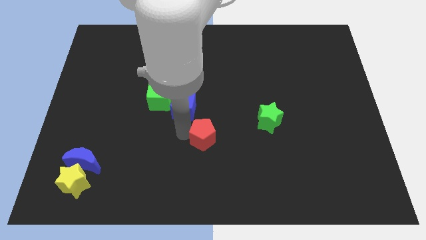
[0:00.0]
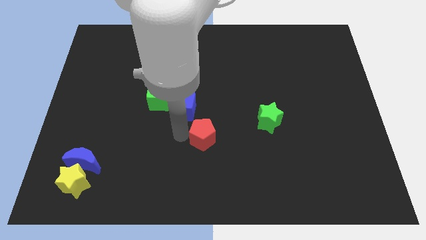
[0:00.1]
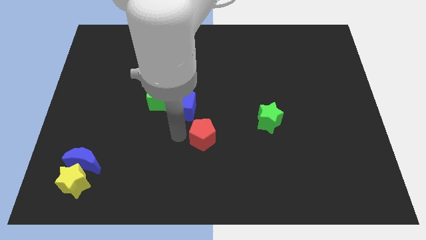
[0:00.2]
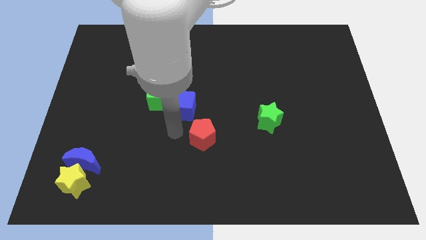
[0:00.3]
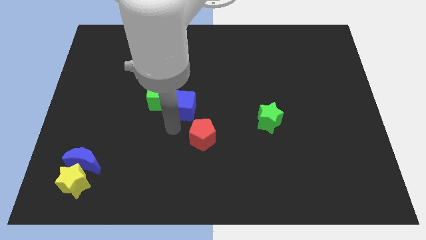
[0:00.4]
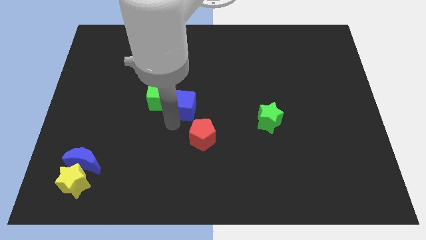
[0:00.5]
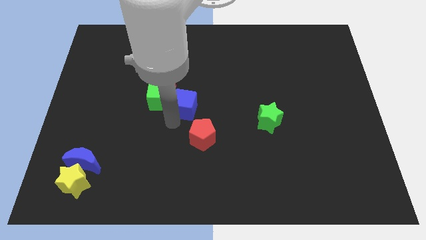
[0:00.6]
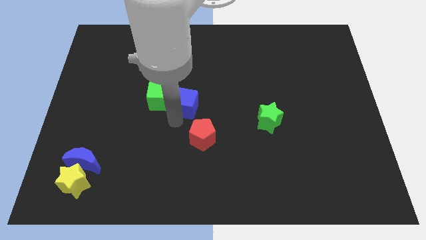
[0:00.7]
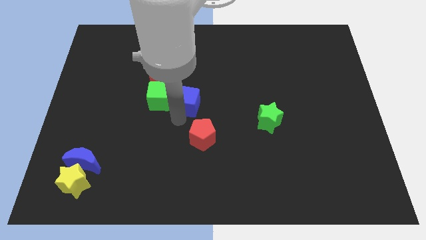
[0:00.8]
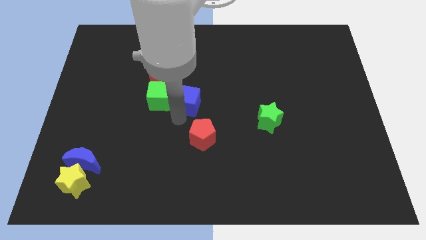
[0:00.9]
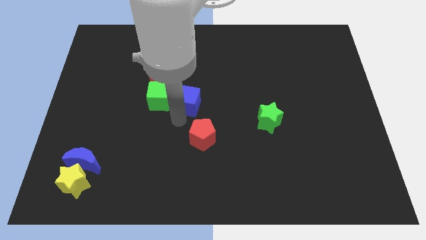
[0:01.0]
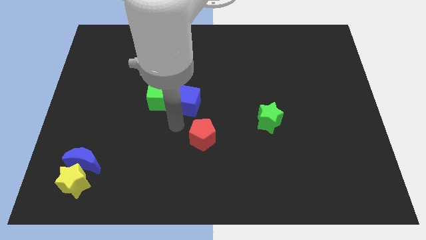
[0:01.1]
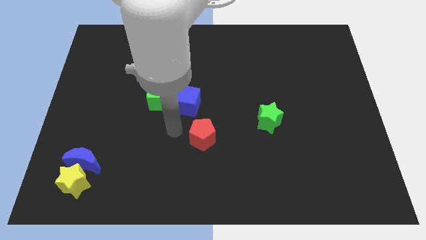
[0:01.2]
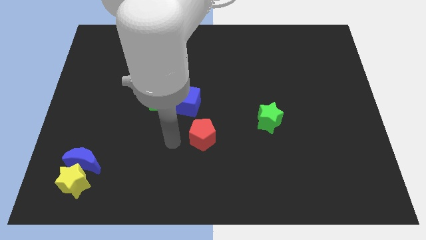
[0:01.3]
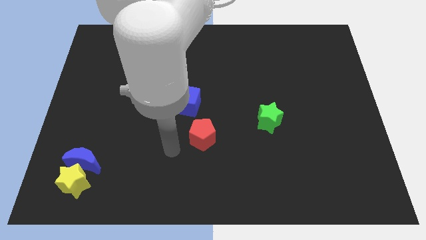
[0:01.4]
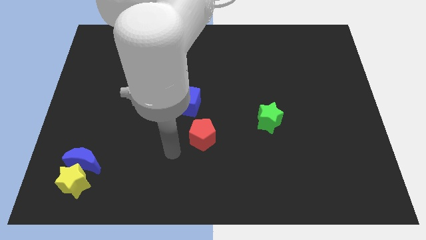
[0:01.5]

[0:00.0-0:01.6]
place the blue cube towards the right side of the green cube

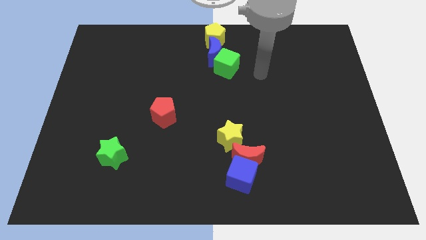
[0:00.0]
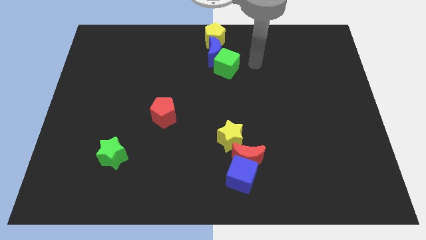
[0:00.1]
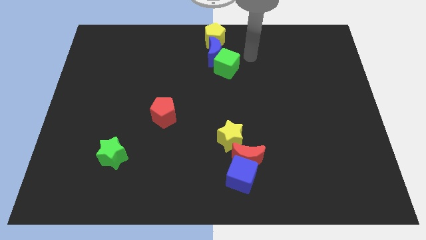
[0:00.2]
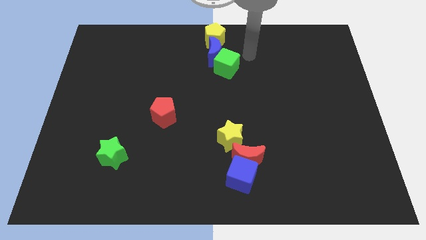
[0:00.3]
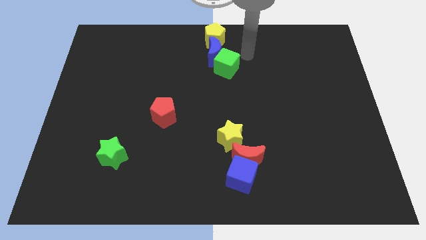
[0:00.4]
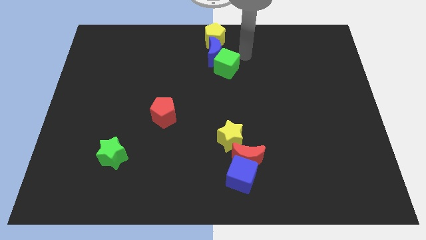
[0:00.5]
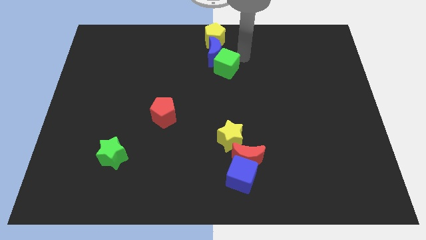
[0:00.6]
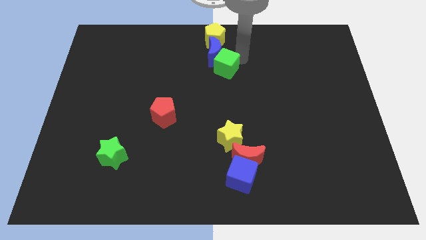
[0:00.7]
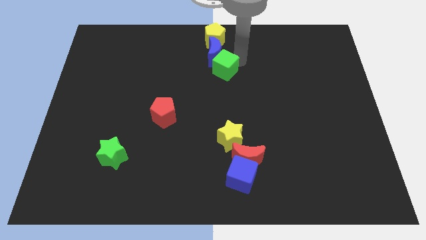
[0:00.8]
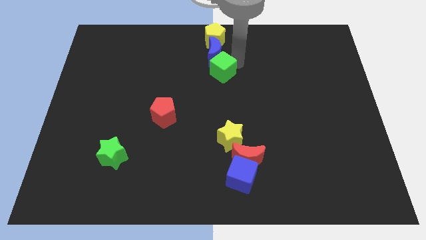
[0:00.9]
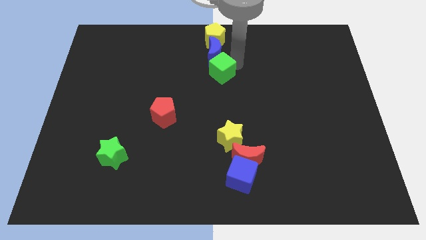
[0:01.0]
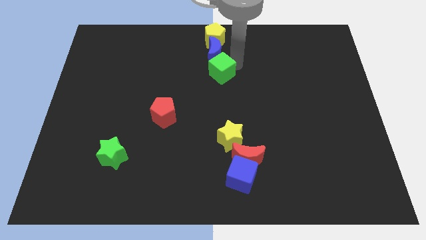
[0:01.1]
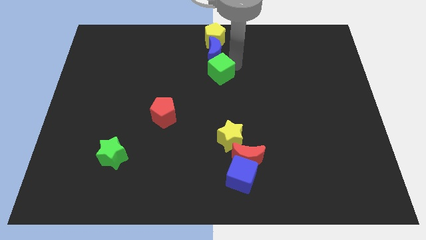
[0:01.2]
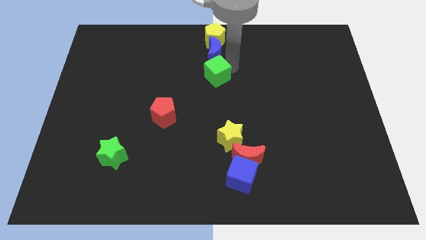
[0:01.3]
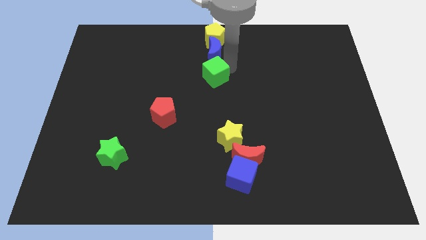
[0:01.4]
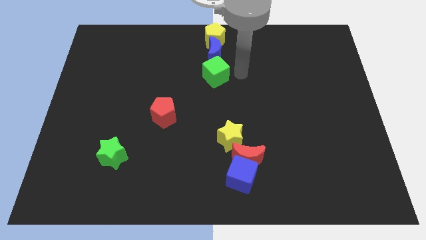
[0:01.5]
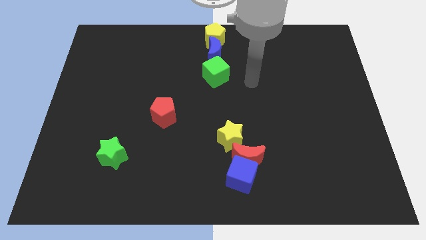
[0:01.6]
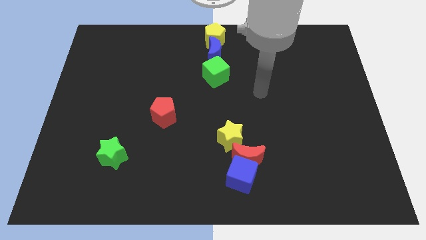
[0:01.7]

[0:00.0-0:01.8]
place the green cube down to the blue moon

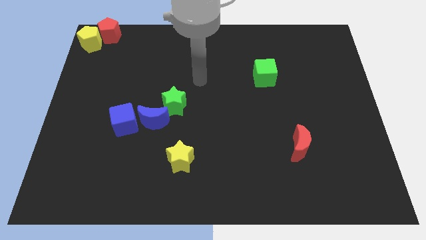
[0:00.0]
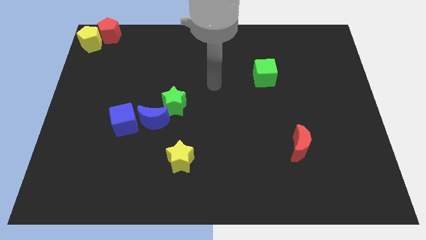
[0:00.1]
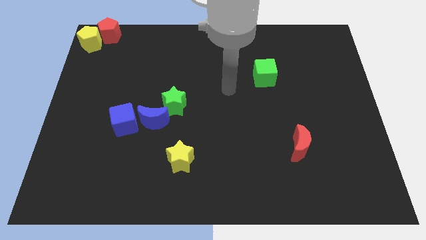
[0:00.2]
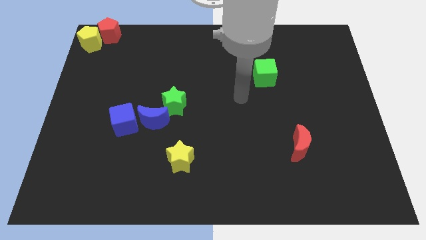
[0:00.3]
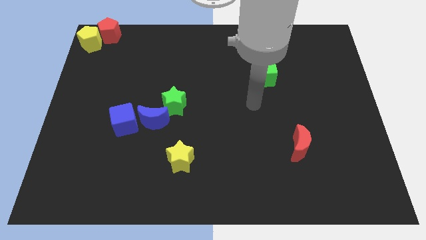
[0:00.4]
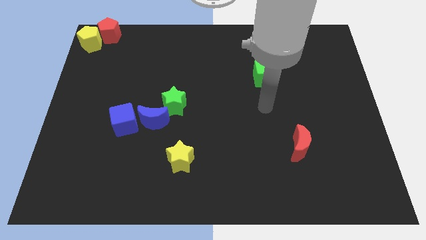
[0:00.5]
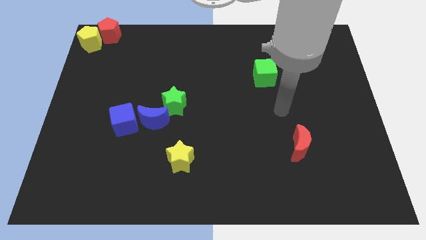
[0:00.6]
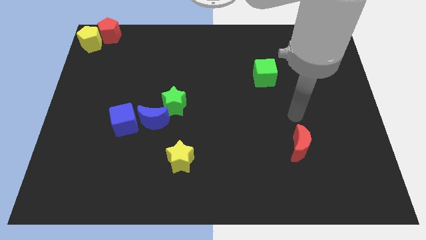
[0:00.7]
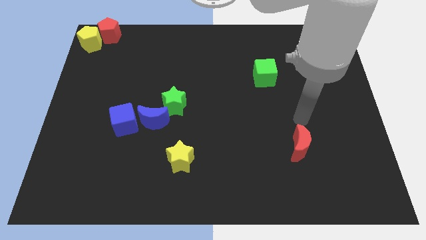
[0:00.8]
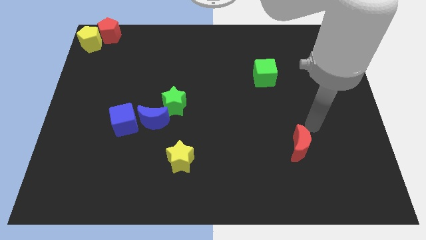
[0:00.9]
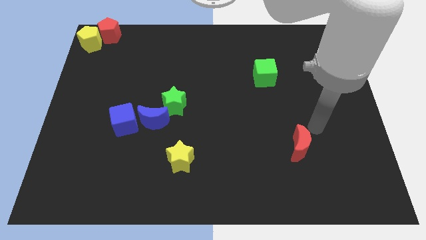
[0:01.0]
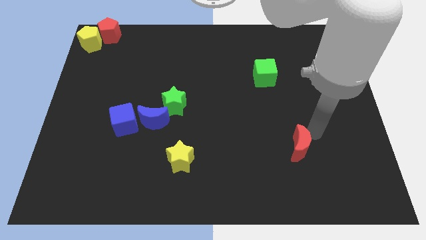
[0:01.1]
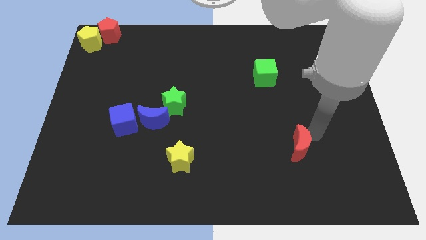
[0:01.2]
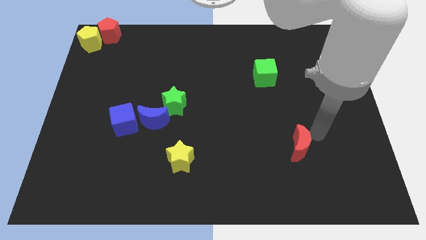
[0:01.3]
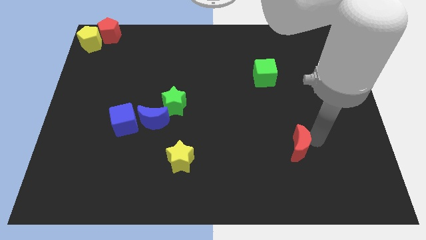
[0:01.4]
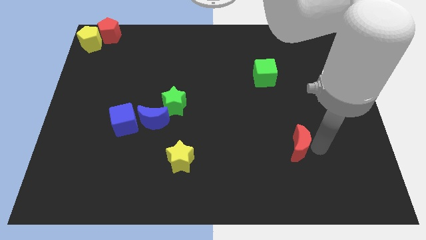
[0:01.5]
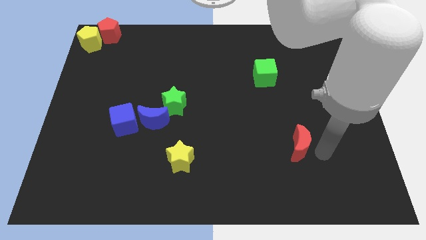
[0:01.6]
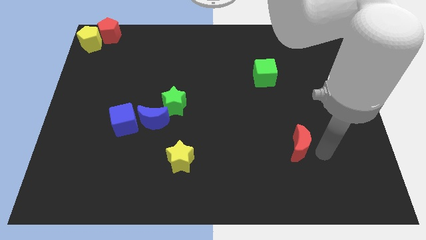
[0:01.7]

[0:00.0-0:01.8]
place your hand at the right of the red crescent

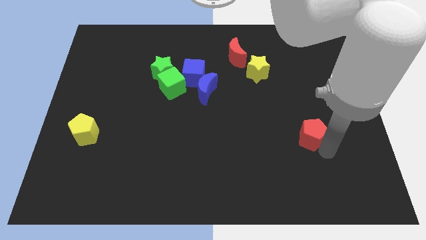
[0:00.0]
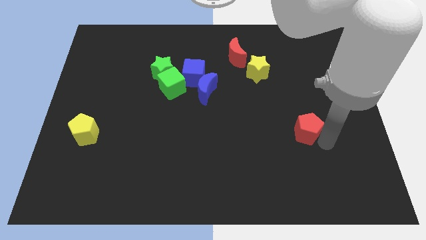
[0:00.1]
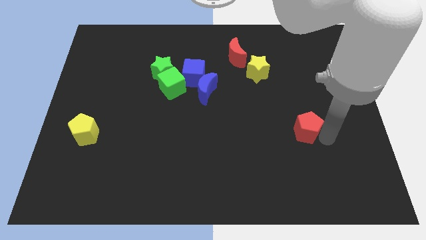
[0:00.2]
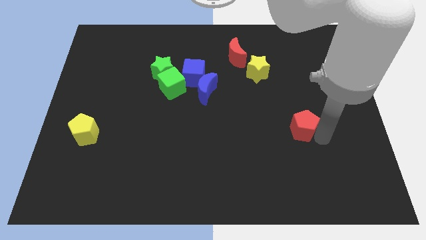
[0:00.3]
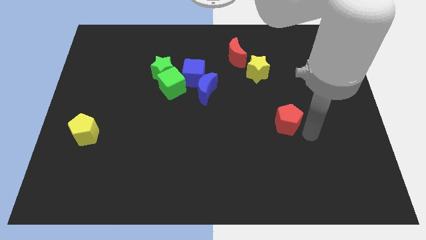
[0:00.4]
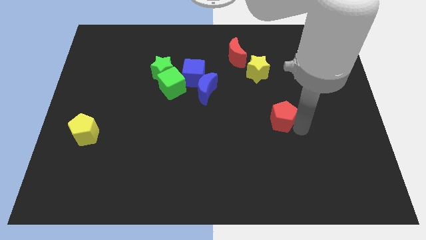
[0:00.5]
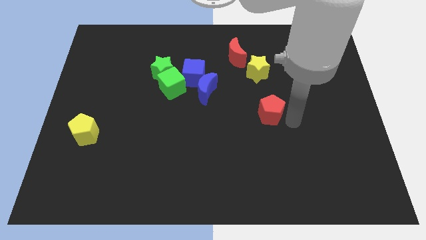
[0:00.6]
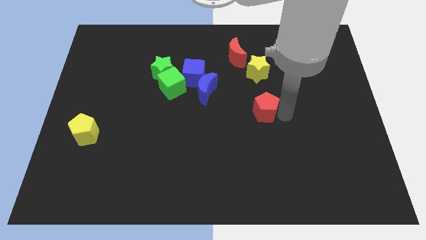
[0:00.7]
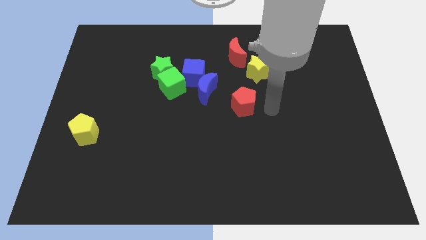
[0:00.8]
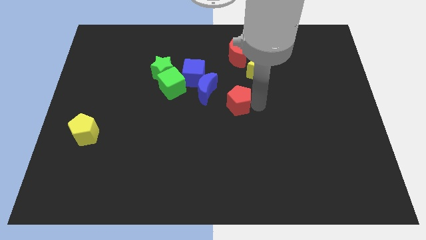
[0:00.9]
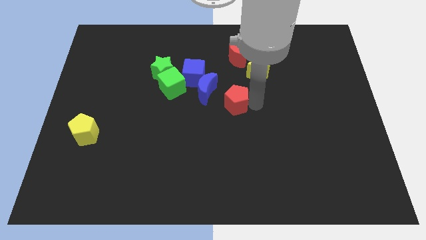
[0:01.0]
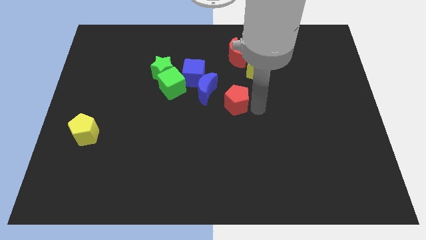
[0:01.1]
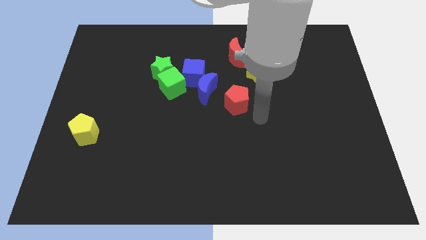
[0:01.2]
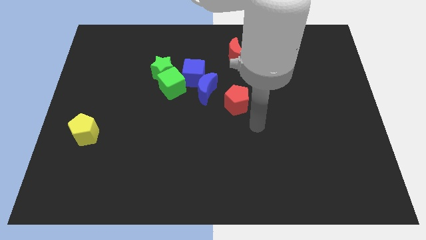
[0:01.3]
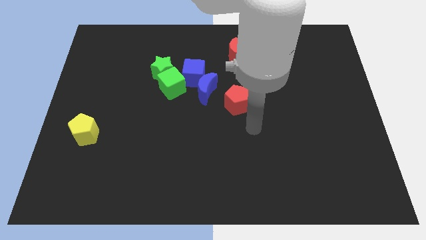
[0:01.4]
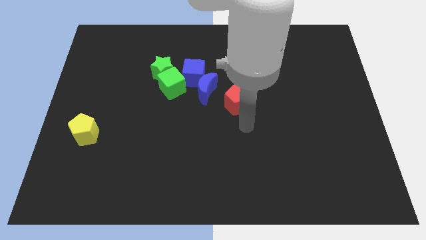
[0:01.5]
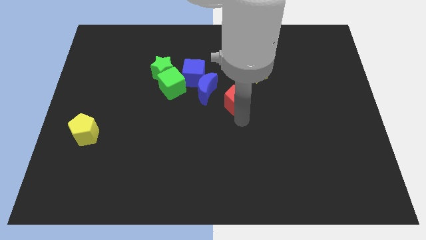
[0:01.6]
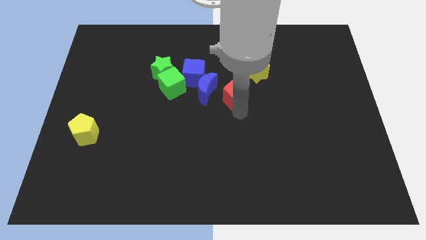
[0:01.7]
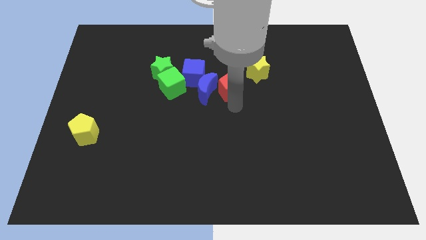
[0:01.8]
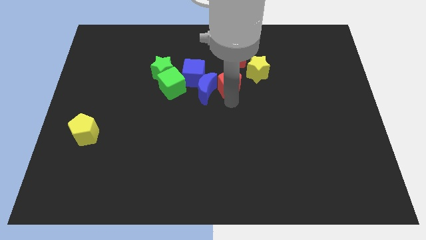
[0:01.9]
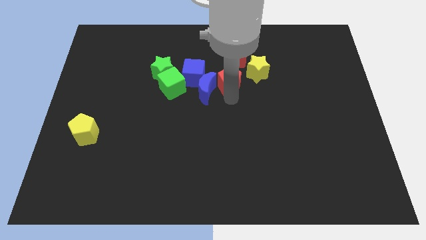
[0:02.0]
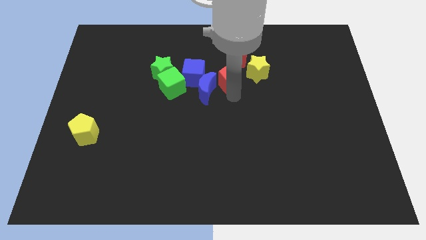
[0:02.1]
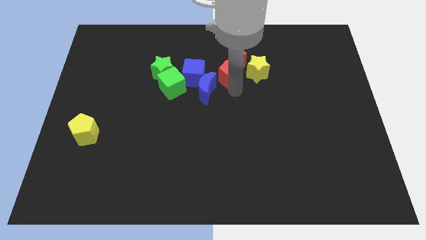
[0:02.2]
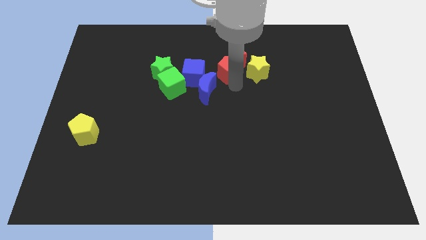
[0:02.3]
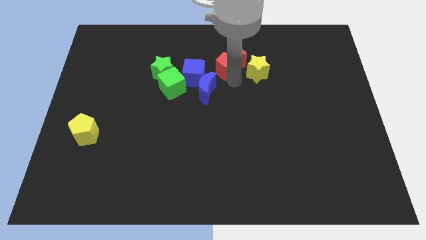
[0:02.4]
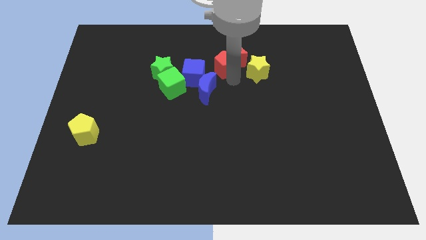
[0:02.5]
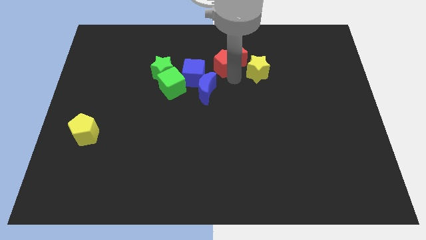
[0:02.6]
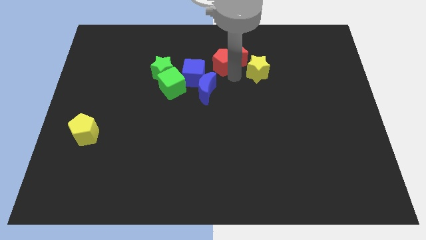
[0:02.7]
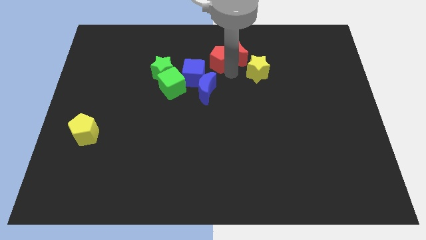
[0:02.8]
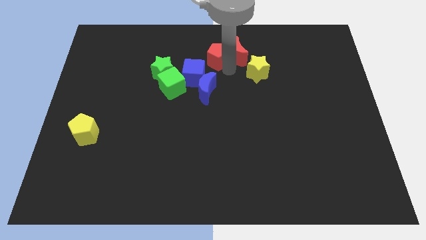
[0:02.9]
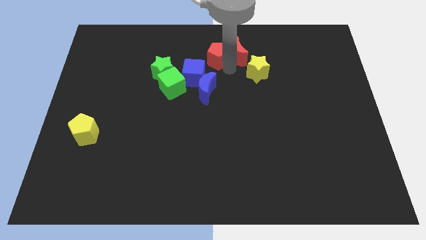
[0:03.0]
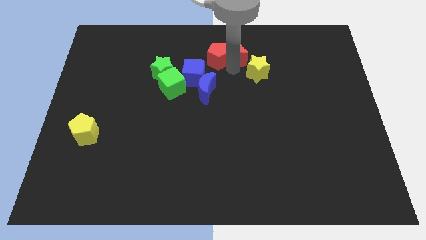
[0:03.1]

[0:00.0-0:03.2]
slide red pentagon to the left of red moon

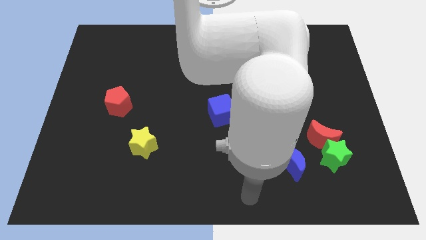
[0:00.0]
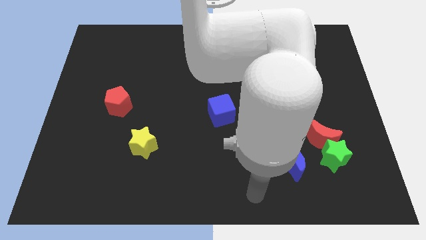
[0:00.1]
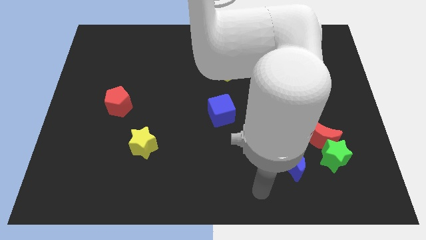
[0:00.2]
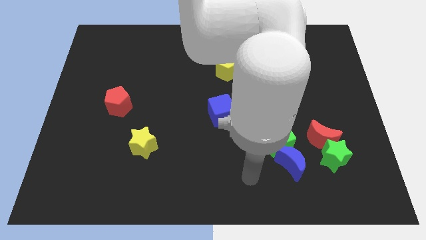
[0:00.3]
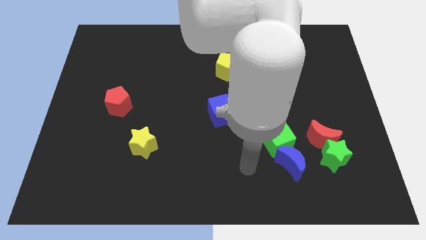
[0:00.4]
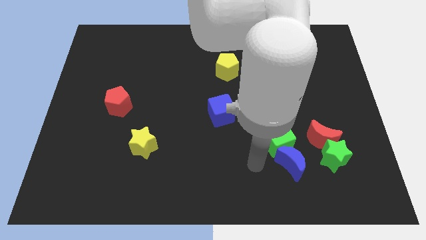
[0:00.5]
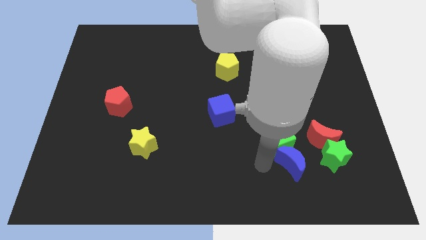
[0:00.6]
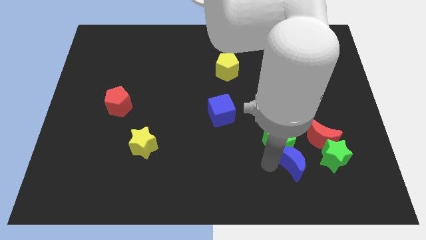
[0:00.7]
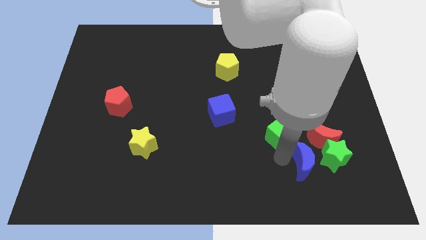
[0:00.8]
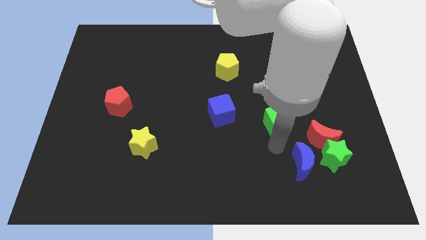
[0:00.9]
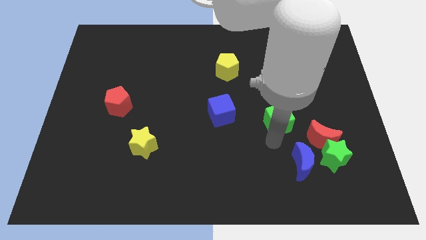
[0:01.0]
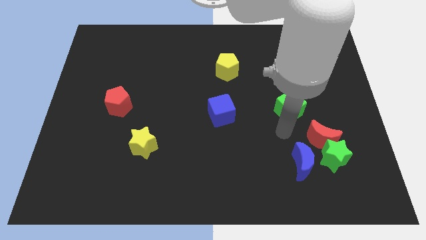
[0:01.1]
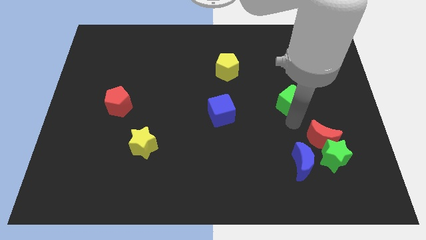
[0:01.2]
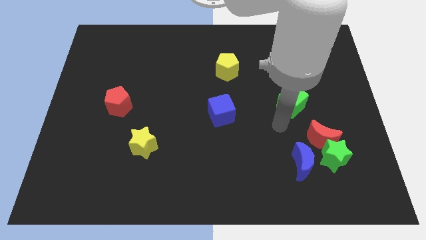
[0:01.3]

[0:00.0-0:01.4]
separate green cube from the blue moon
